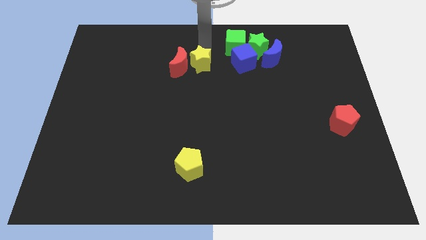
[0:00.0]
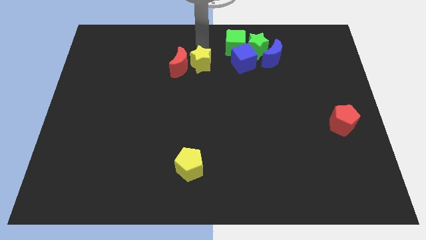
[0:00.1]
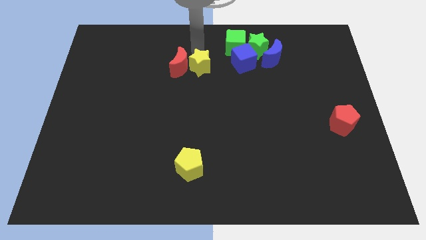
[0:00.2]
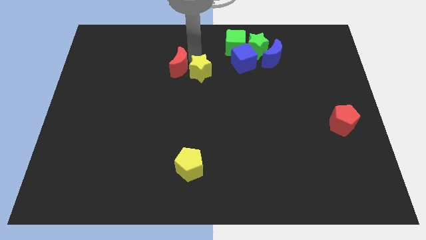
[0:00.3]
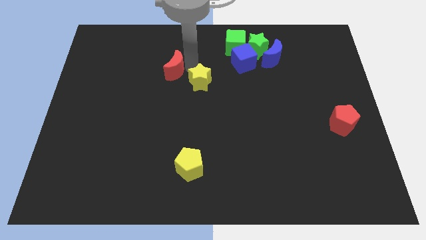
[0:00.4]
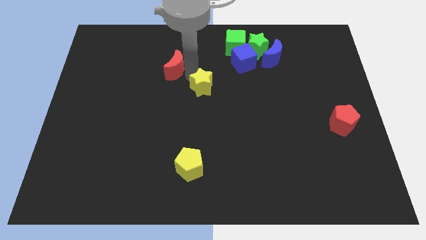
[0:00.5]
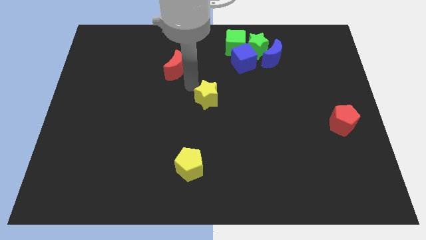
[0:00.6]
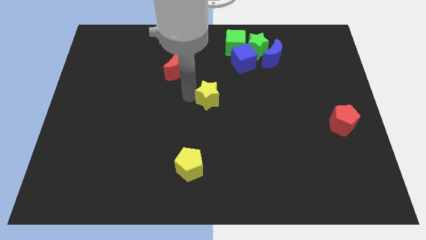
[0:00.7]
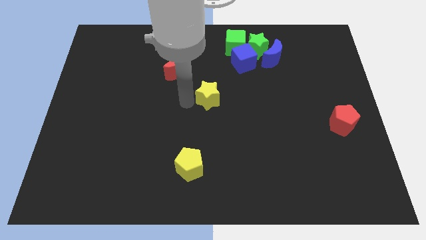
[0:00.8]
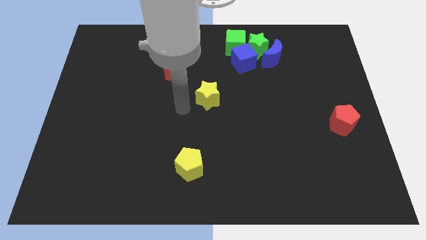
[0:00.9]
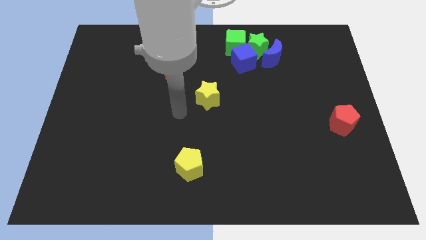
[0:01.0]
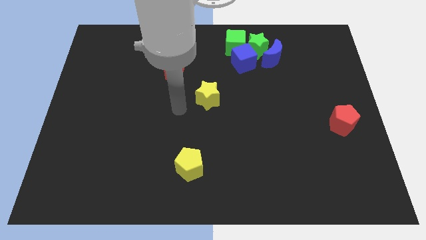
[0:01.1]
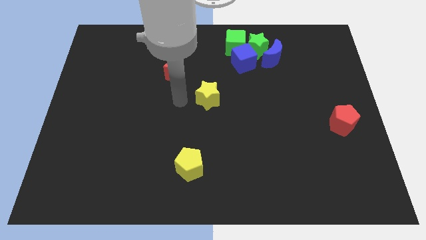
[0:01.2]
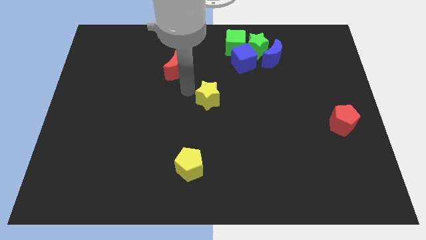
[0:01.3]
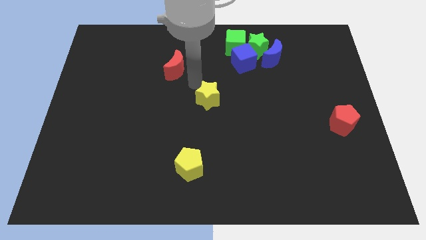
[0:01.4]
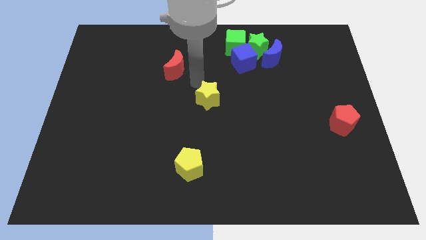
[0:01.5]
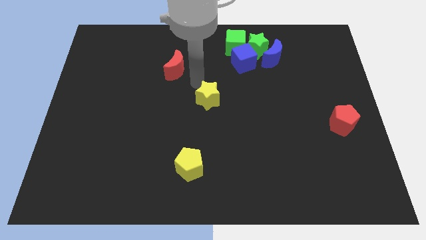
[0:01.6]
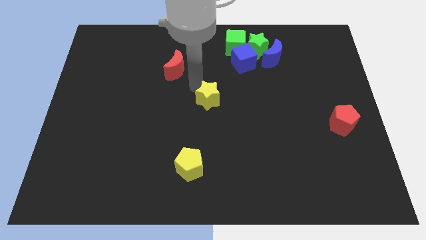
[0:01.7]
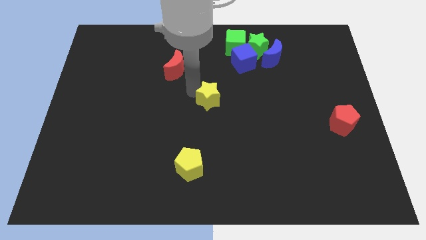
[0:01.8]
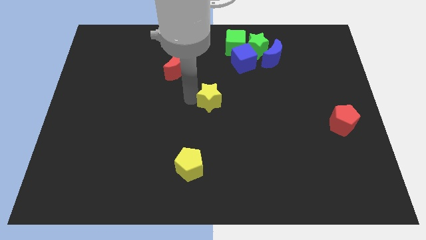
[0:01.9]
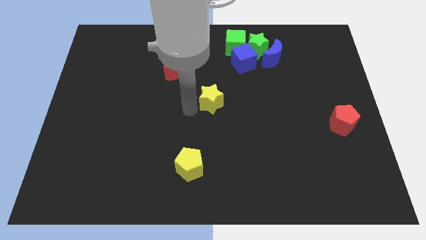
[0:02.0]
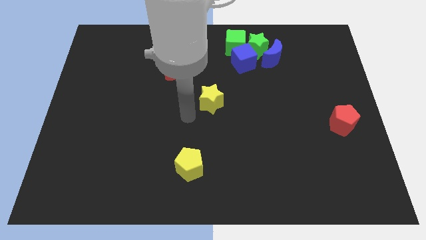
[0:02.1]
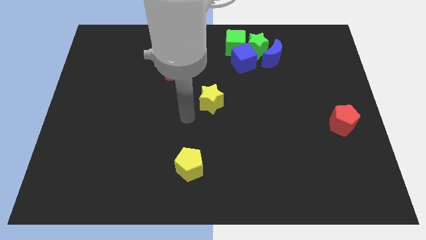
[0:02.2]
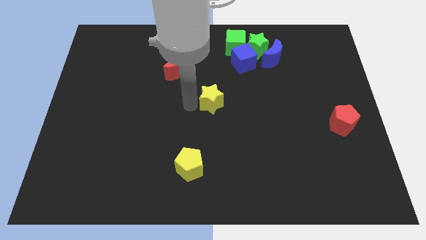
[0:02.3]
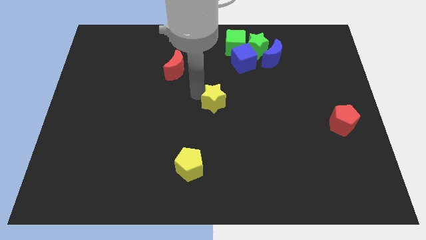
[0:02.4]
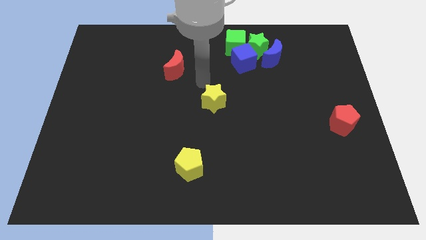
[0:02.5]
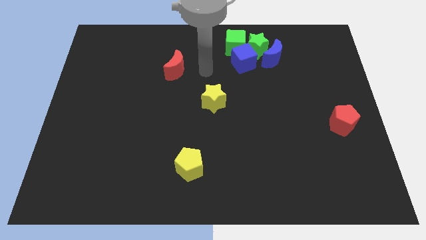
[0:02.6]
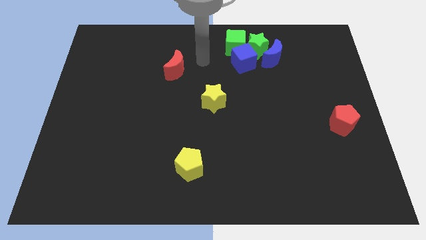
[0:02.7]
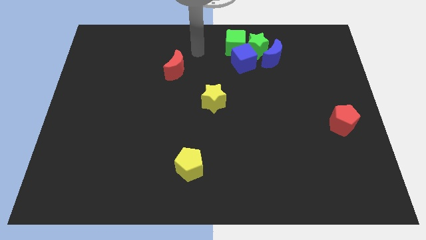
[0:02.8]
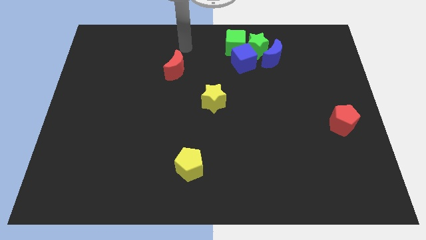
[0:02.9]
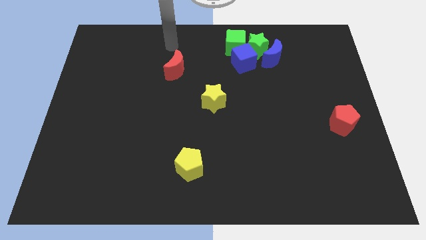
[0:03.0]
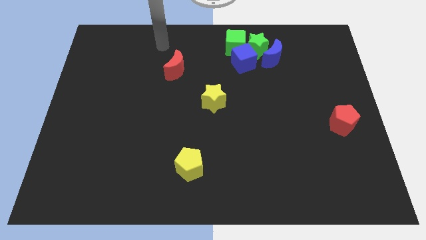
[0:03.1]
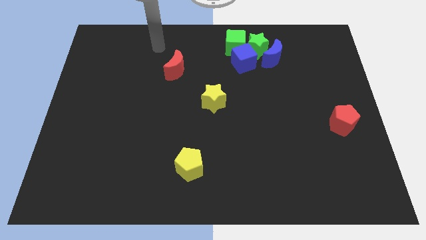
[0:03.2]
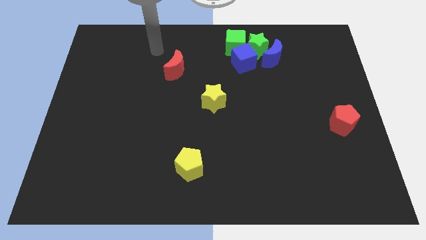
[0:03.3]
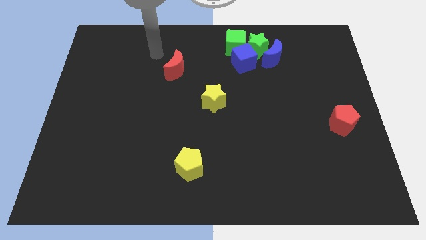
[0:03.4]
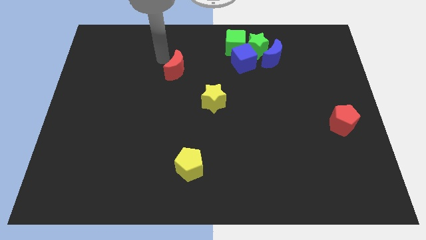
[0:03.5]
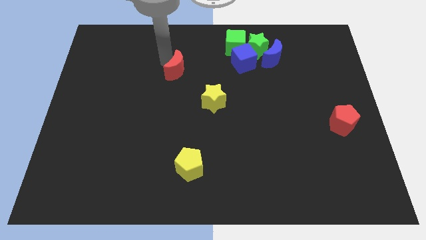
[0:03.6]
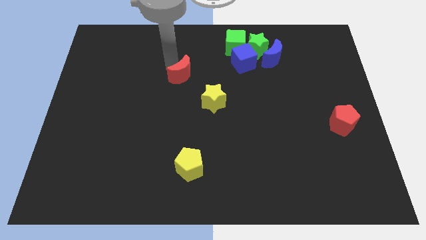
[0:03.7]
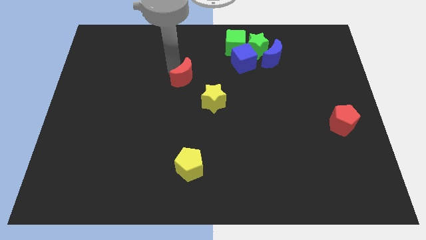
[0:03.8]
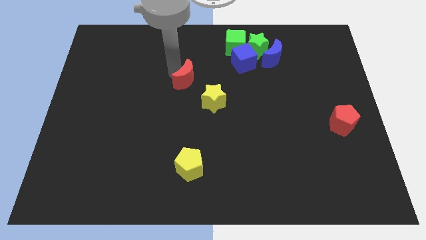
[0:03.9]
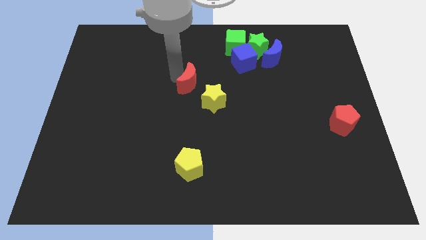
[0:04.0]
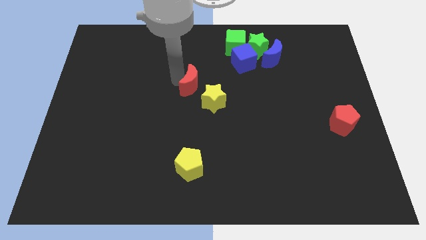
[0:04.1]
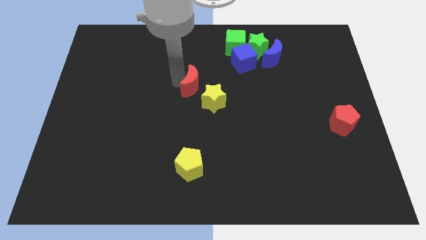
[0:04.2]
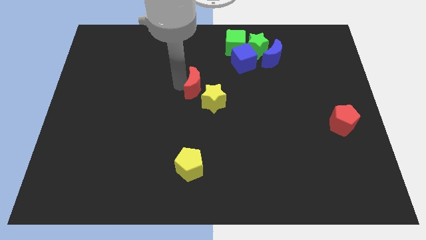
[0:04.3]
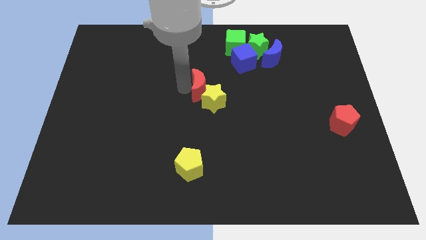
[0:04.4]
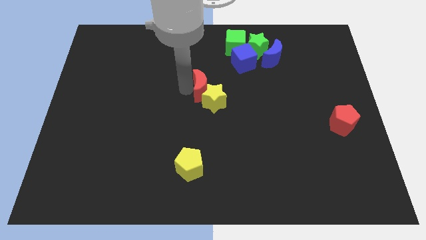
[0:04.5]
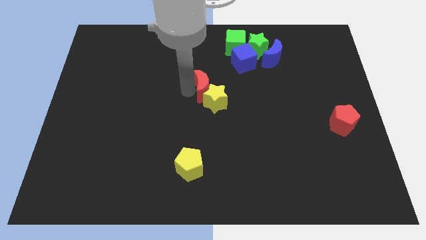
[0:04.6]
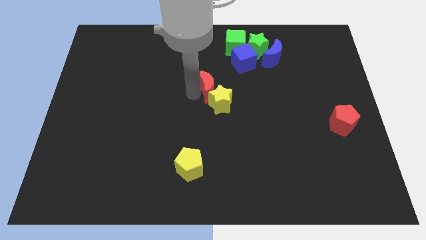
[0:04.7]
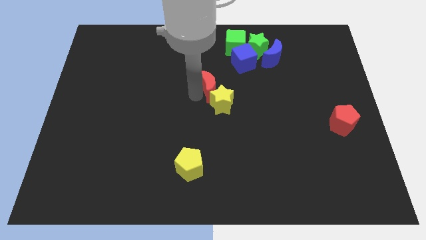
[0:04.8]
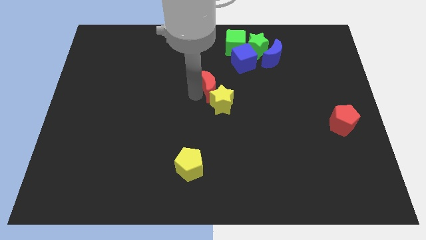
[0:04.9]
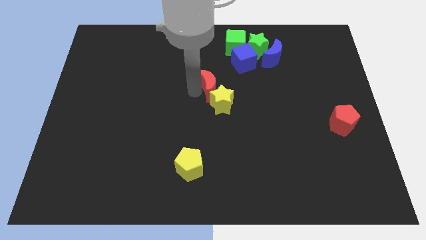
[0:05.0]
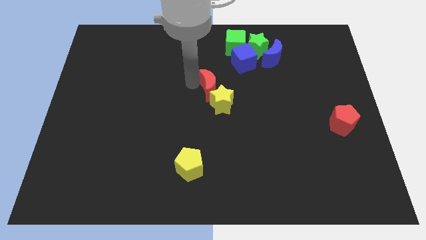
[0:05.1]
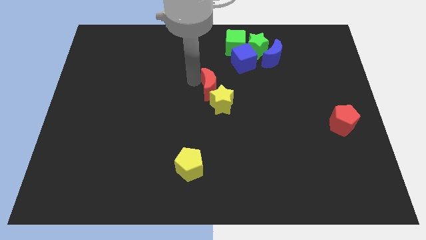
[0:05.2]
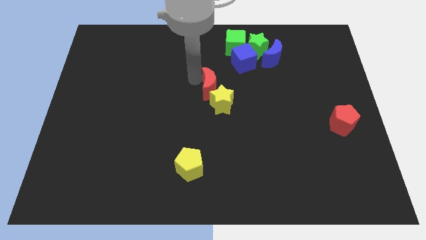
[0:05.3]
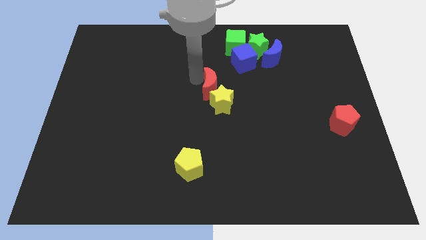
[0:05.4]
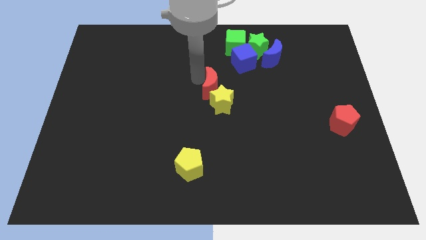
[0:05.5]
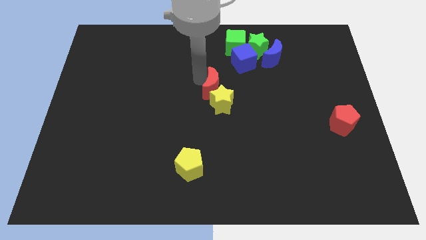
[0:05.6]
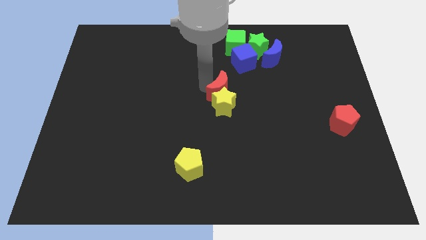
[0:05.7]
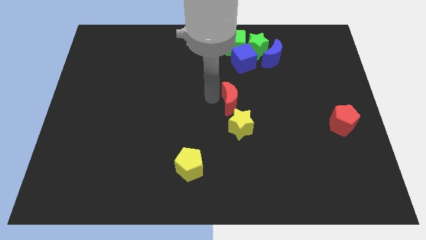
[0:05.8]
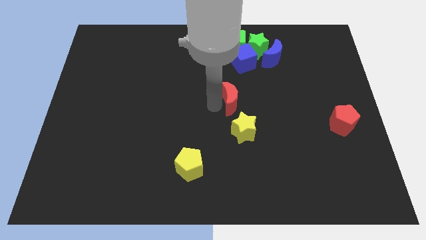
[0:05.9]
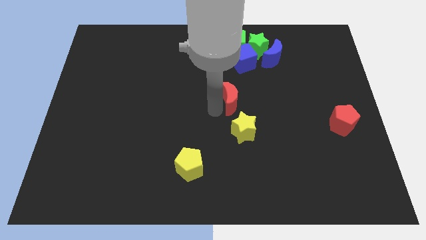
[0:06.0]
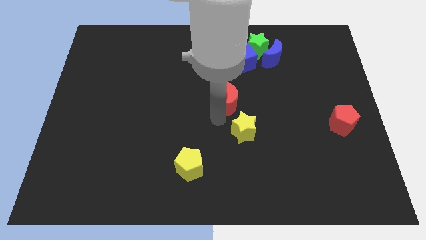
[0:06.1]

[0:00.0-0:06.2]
move the red moon and yellow star towards the center

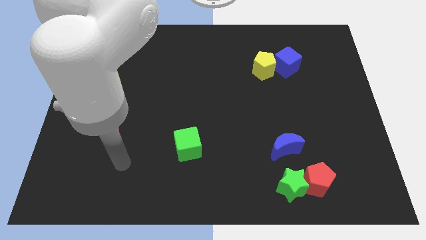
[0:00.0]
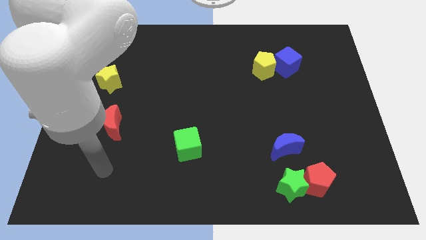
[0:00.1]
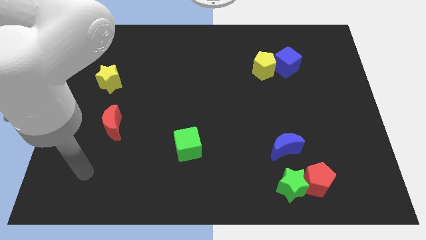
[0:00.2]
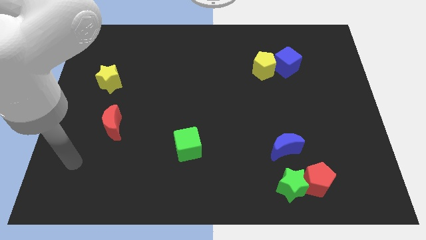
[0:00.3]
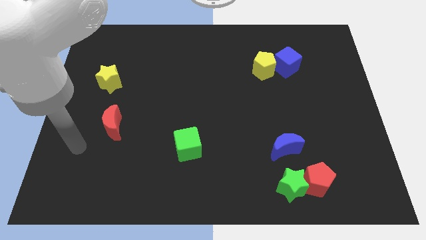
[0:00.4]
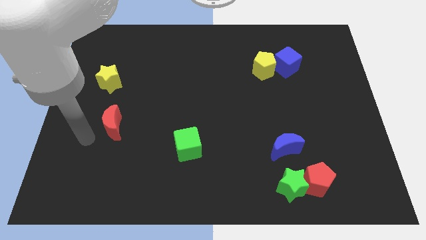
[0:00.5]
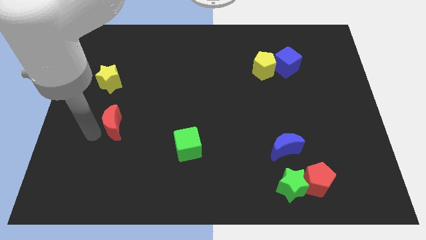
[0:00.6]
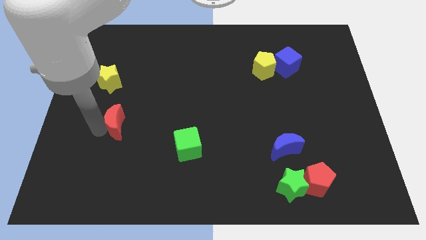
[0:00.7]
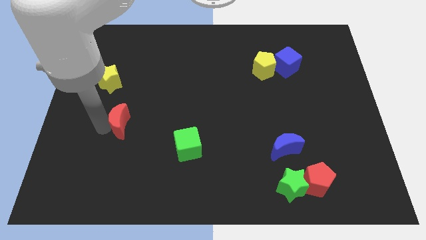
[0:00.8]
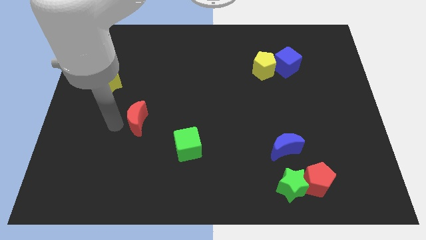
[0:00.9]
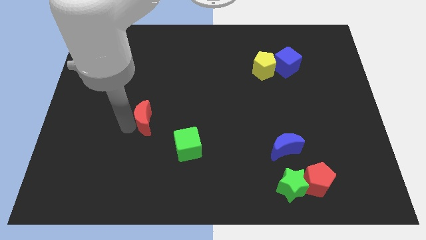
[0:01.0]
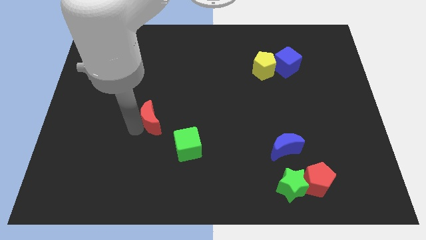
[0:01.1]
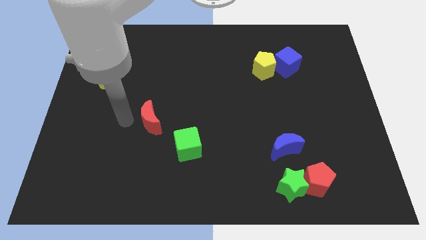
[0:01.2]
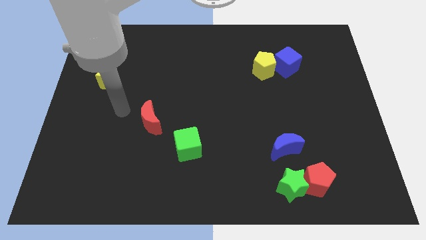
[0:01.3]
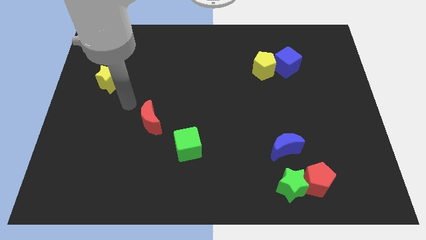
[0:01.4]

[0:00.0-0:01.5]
move the red moon diagonally to the top left of the green cube

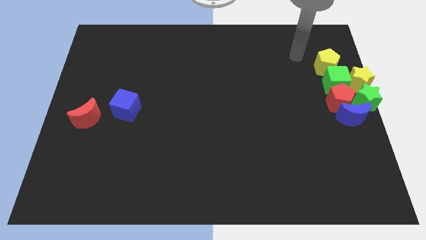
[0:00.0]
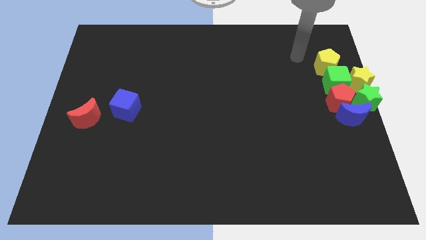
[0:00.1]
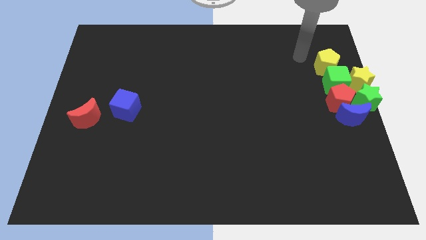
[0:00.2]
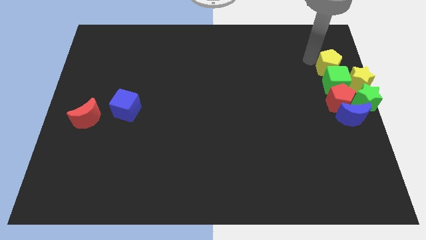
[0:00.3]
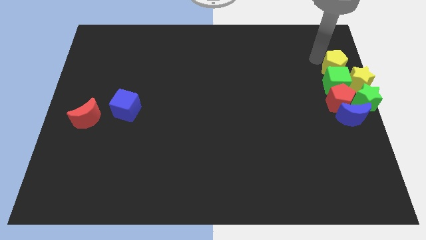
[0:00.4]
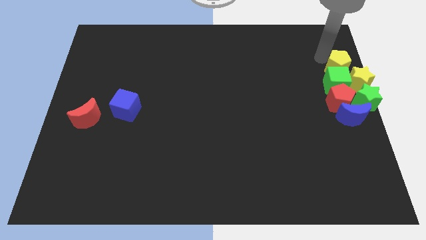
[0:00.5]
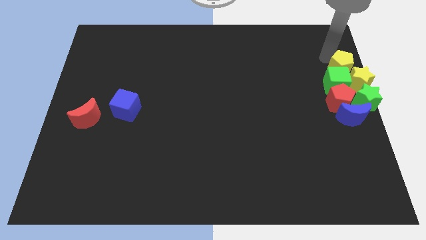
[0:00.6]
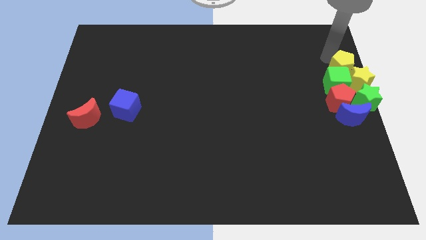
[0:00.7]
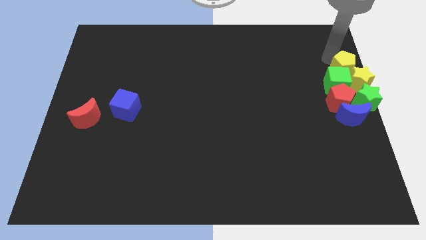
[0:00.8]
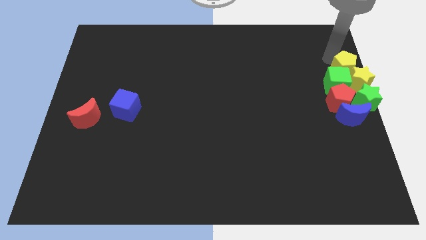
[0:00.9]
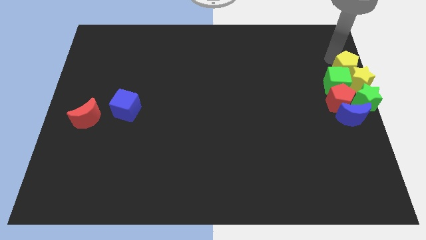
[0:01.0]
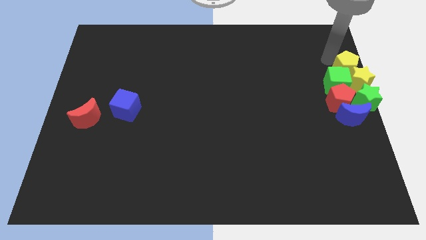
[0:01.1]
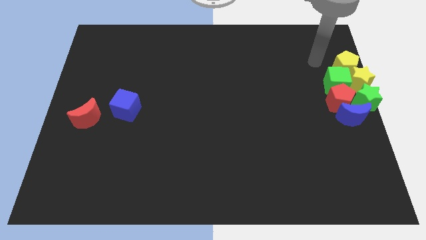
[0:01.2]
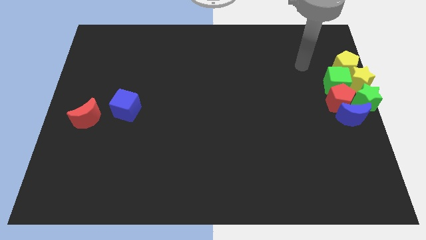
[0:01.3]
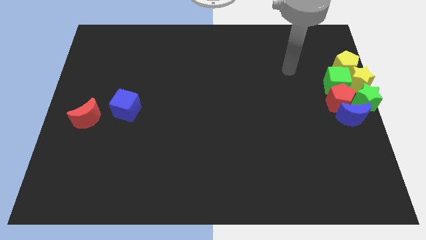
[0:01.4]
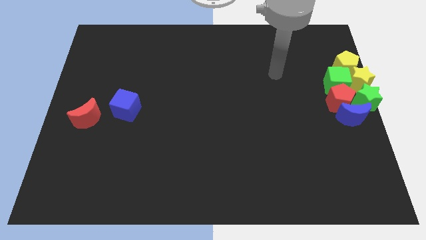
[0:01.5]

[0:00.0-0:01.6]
place the yellow pentagon above the group of blocks
